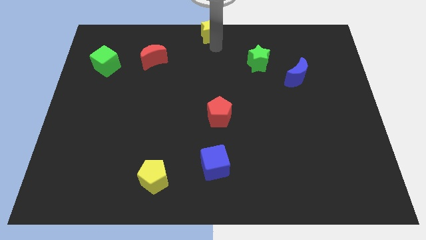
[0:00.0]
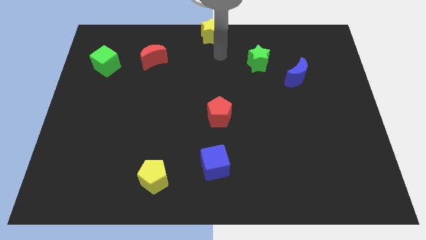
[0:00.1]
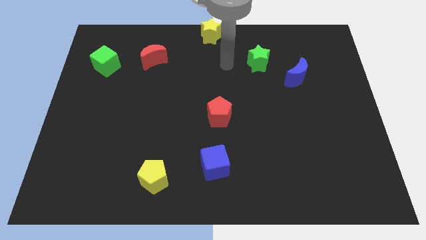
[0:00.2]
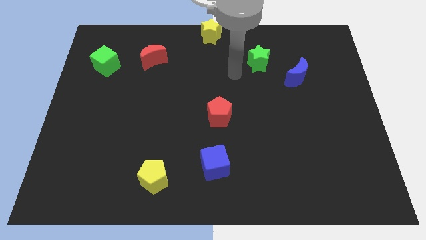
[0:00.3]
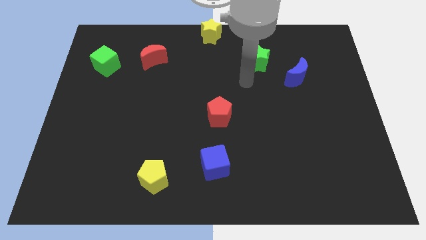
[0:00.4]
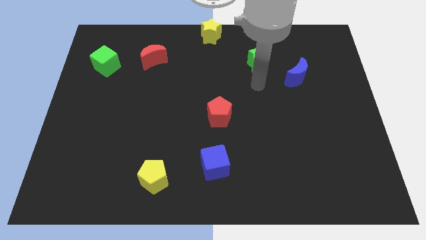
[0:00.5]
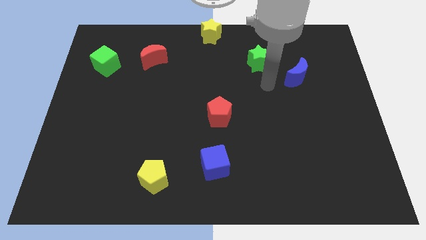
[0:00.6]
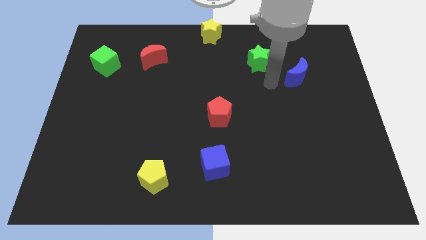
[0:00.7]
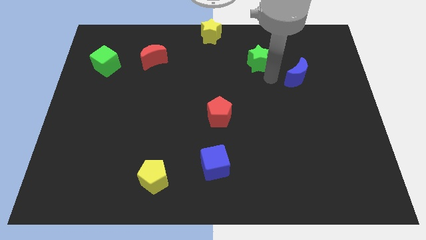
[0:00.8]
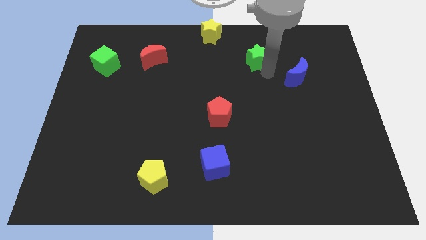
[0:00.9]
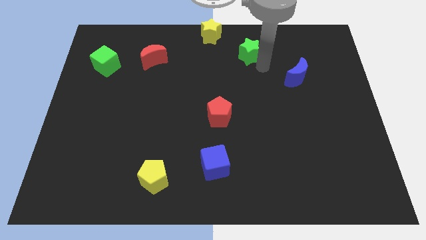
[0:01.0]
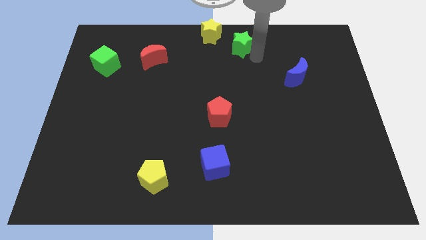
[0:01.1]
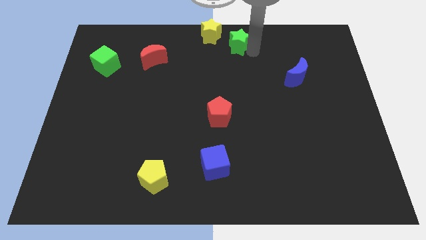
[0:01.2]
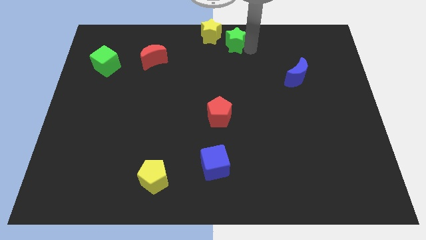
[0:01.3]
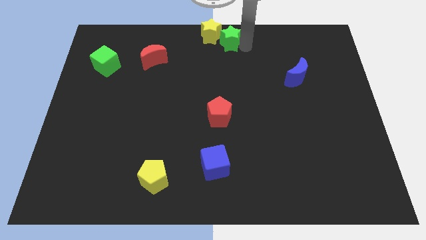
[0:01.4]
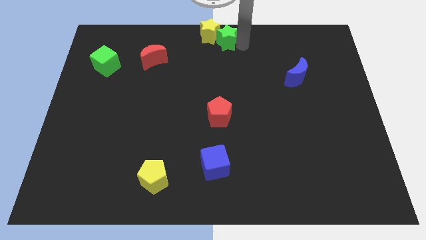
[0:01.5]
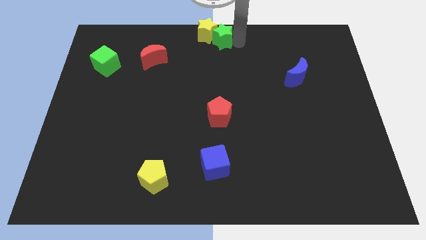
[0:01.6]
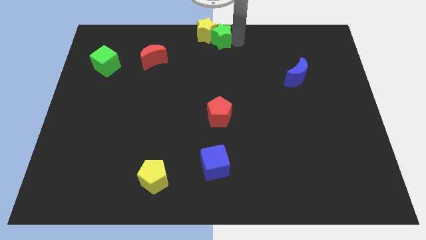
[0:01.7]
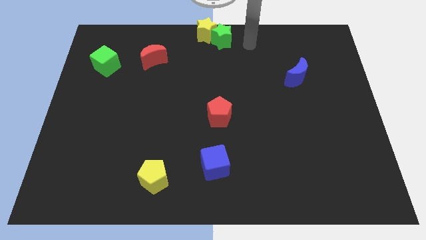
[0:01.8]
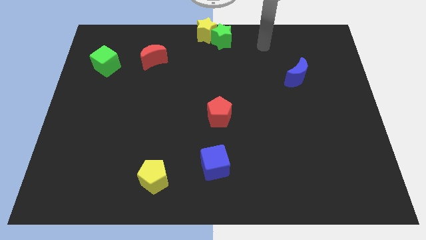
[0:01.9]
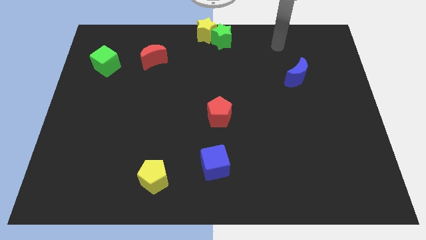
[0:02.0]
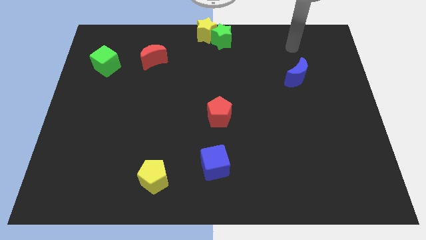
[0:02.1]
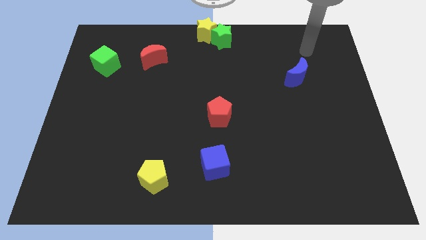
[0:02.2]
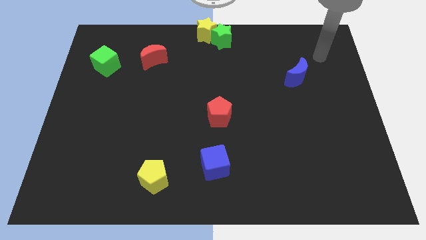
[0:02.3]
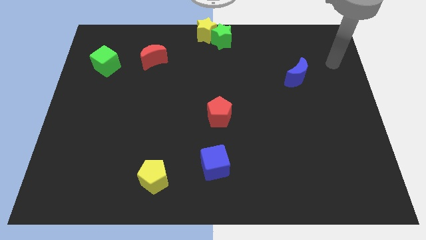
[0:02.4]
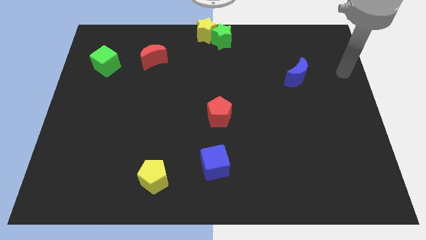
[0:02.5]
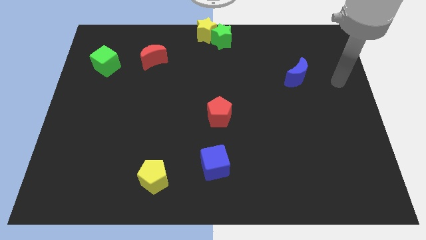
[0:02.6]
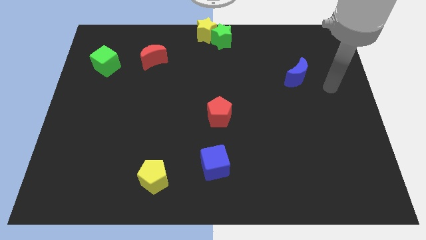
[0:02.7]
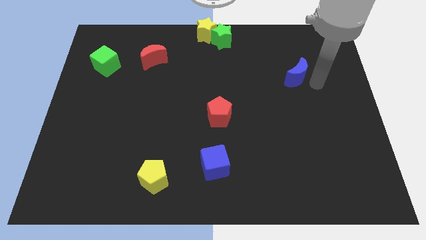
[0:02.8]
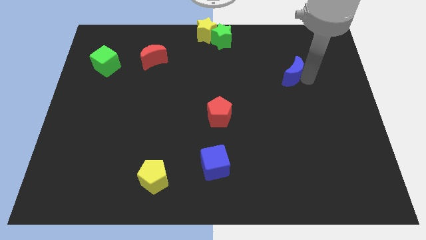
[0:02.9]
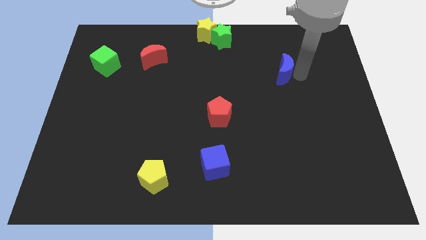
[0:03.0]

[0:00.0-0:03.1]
place green star into the yellow star

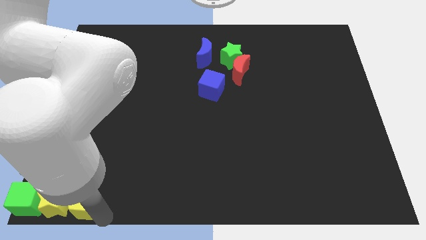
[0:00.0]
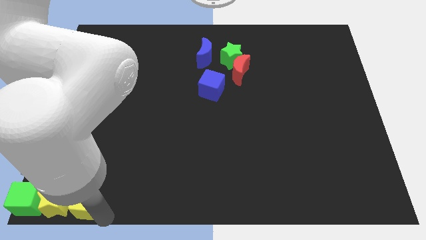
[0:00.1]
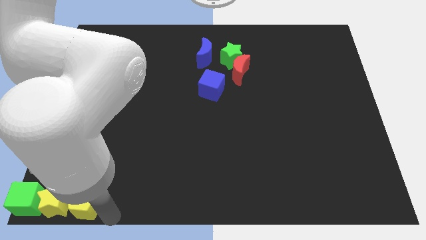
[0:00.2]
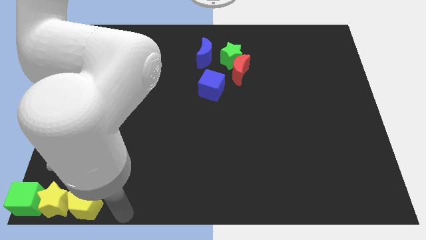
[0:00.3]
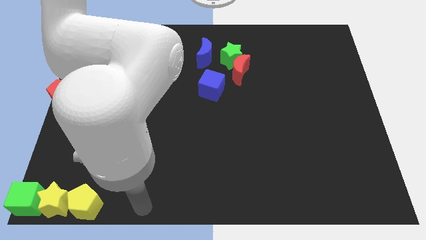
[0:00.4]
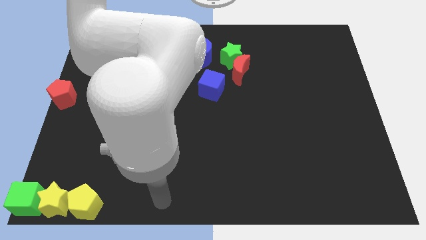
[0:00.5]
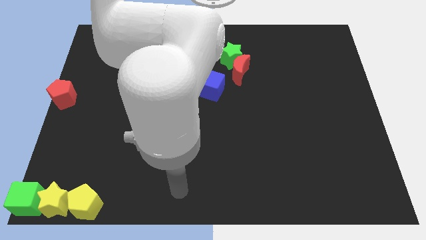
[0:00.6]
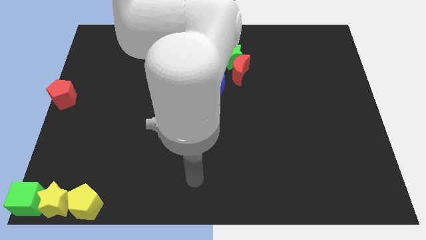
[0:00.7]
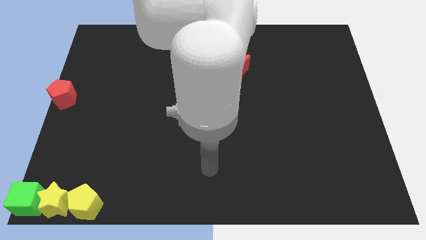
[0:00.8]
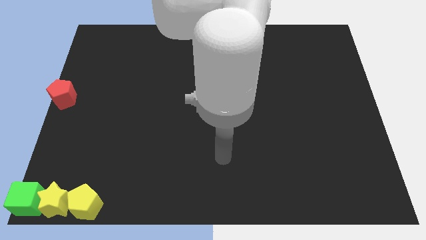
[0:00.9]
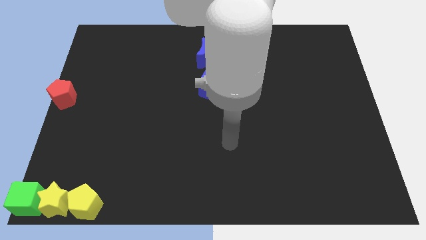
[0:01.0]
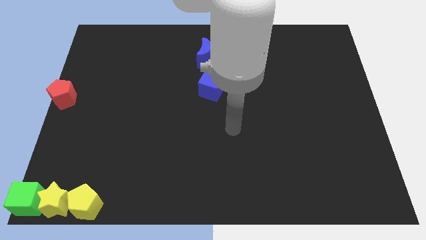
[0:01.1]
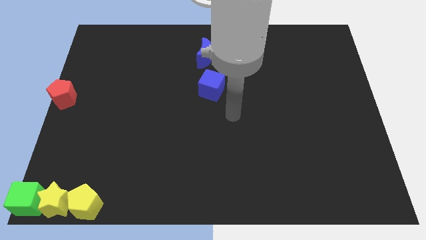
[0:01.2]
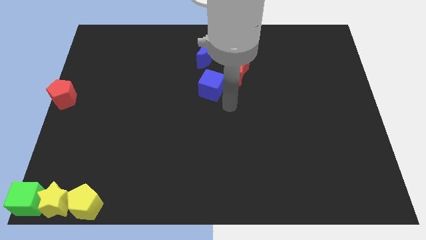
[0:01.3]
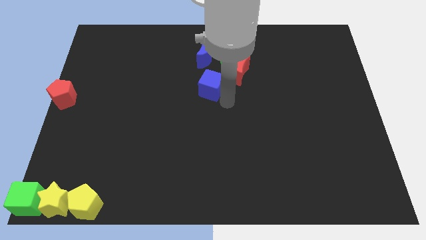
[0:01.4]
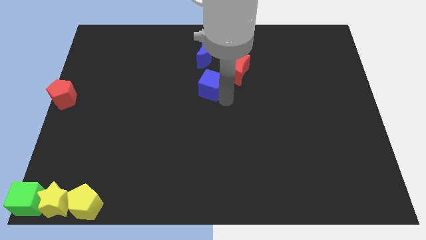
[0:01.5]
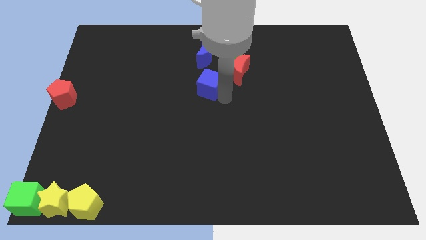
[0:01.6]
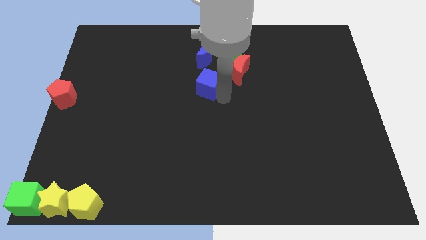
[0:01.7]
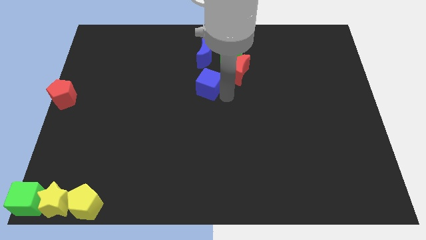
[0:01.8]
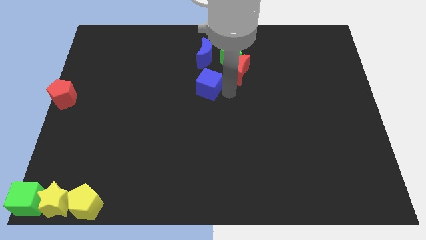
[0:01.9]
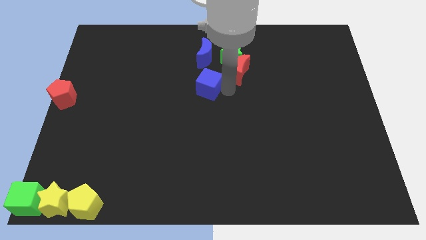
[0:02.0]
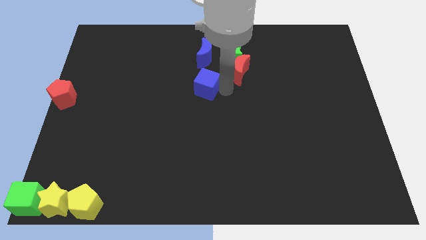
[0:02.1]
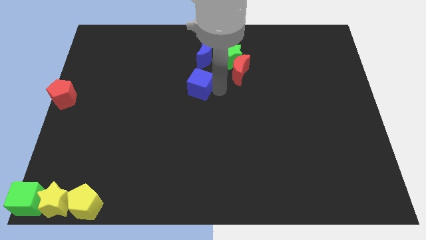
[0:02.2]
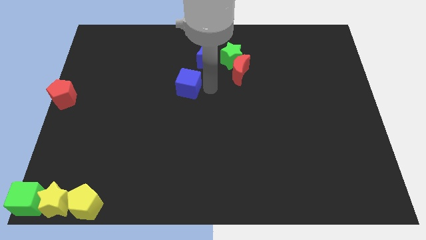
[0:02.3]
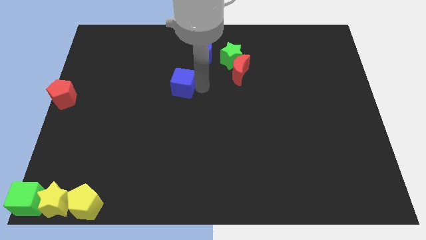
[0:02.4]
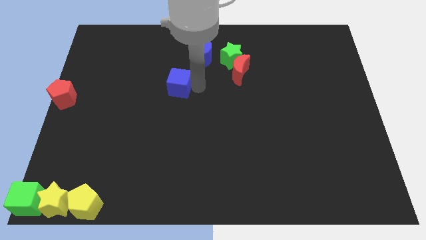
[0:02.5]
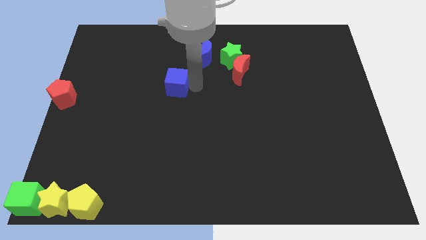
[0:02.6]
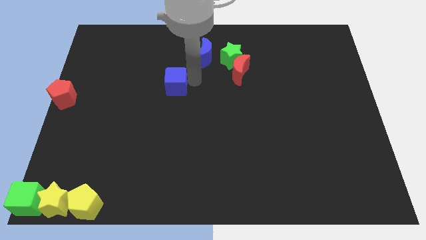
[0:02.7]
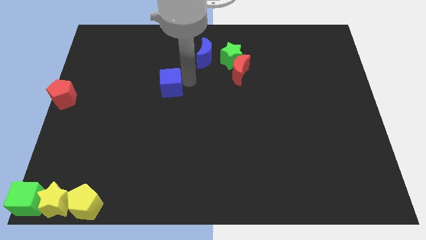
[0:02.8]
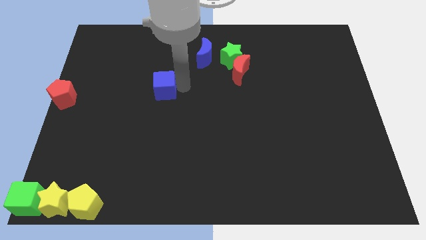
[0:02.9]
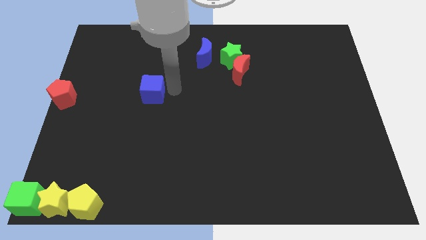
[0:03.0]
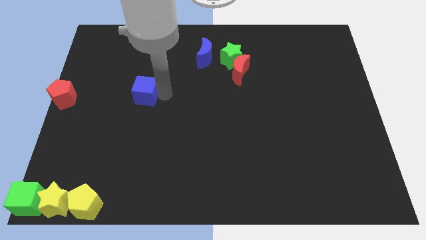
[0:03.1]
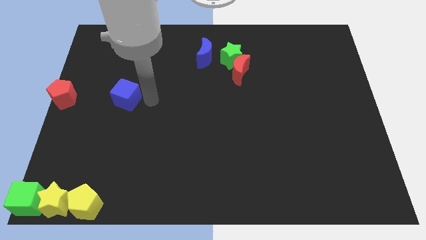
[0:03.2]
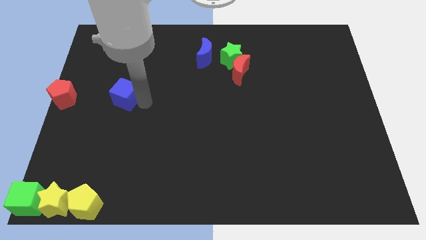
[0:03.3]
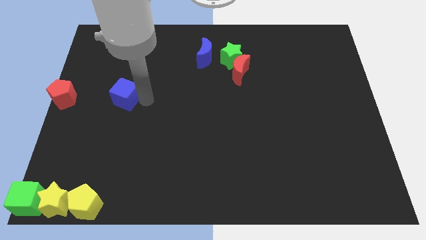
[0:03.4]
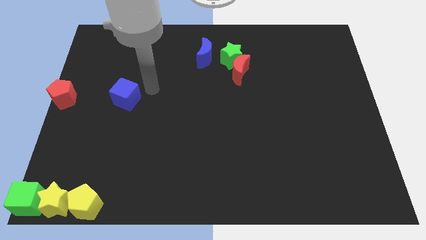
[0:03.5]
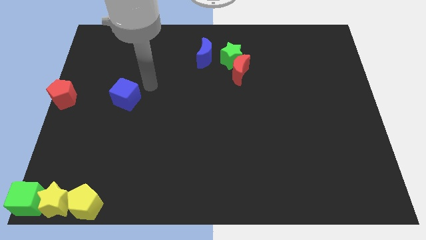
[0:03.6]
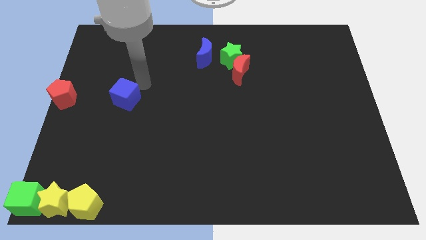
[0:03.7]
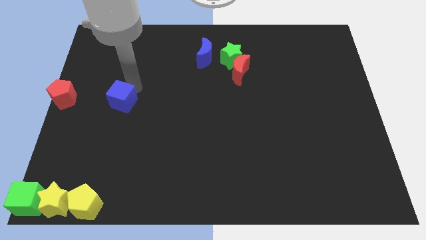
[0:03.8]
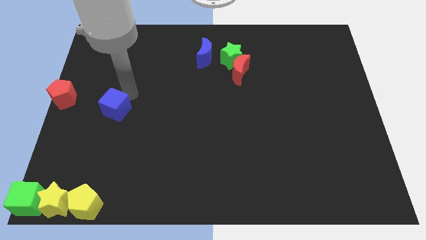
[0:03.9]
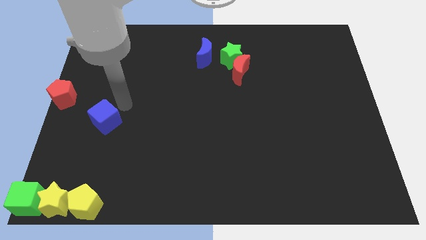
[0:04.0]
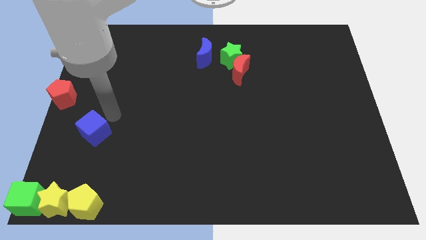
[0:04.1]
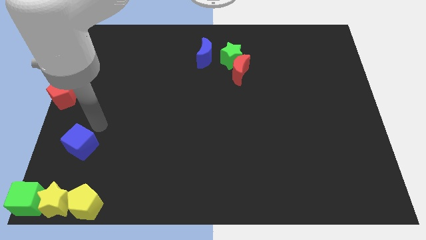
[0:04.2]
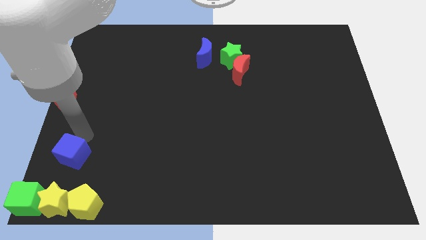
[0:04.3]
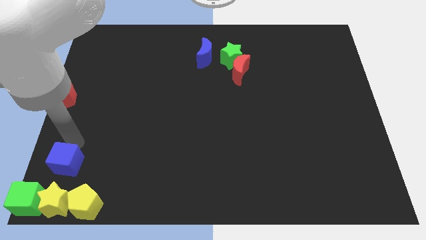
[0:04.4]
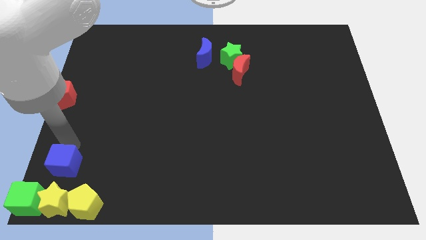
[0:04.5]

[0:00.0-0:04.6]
place the blue cube at the top of yellow star

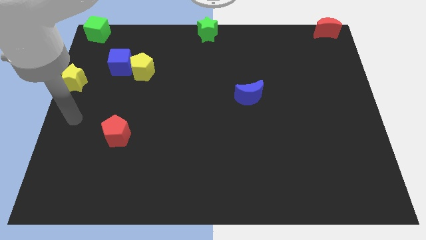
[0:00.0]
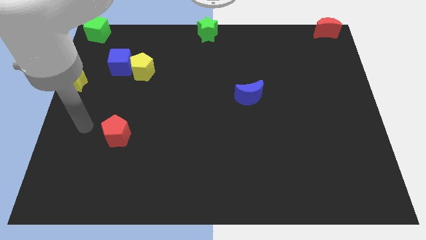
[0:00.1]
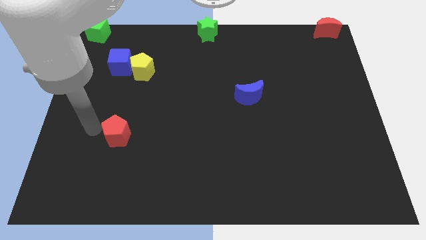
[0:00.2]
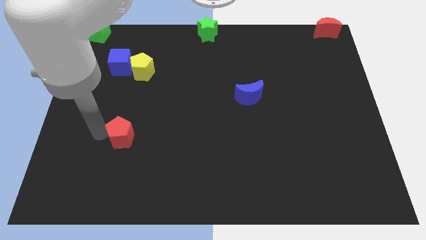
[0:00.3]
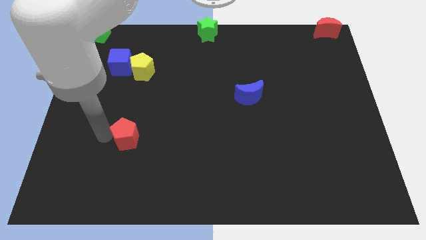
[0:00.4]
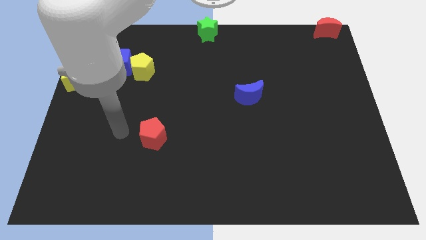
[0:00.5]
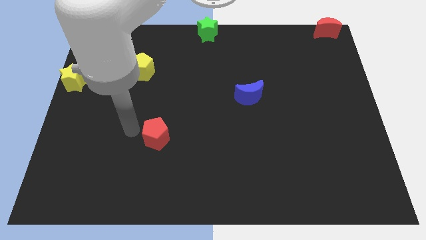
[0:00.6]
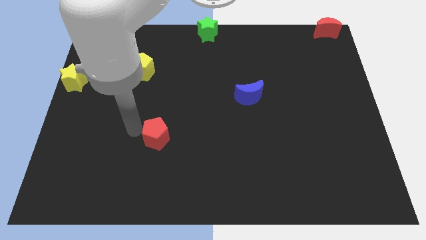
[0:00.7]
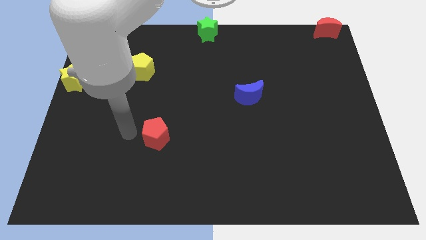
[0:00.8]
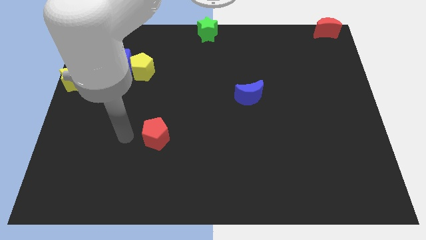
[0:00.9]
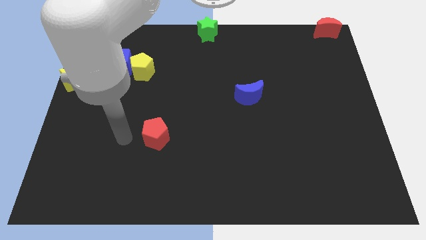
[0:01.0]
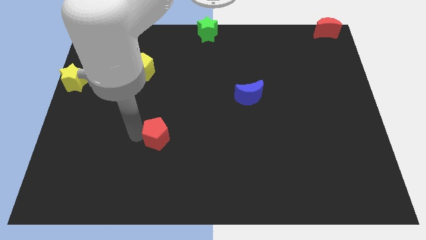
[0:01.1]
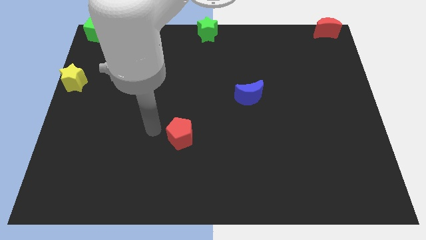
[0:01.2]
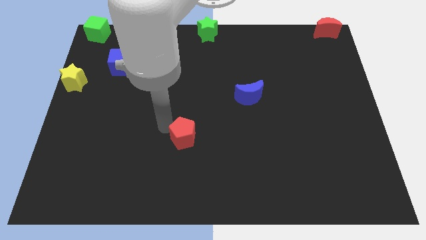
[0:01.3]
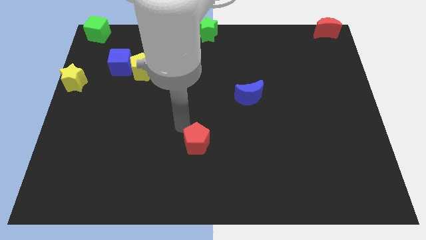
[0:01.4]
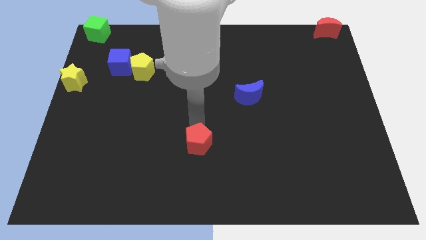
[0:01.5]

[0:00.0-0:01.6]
move the red pentagon to the center
